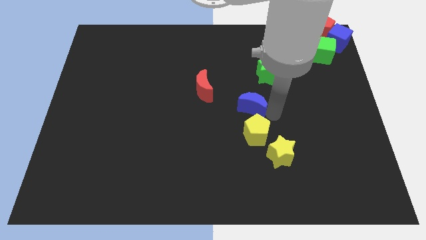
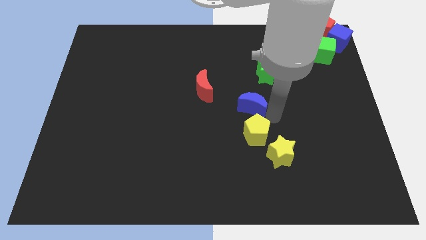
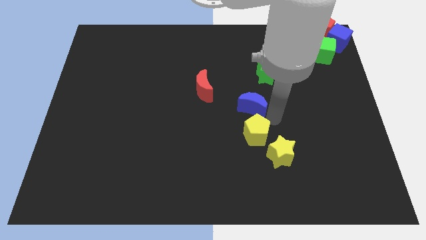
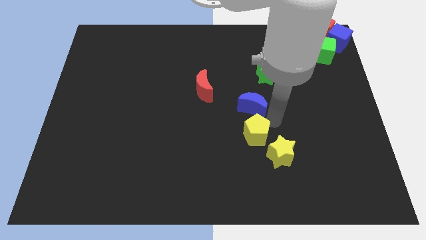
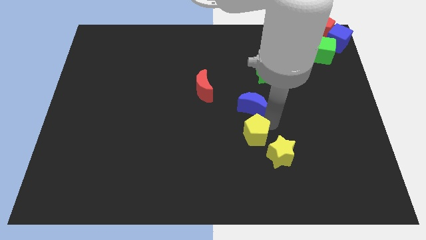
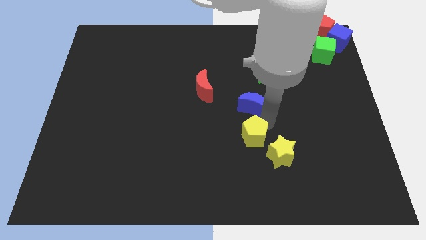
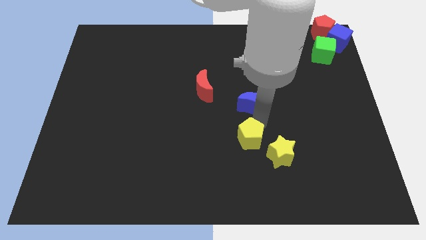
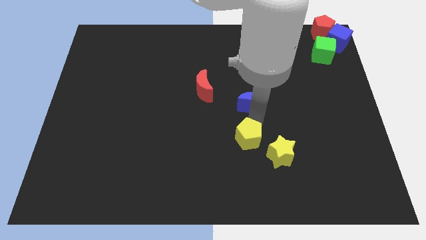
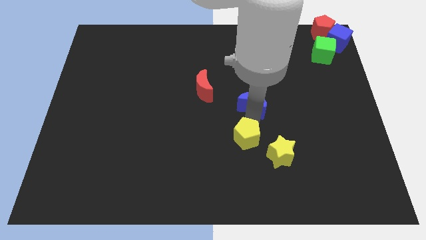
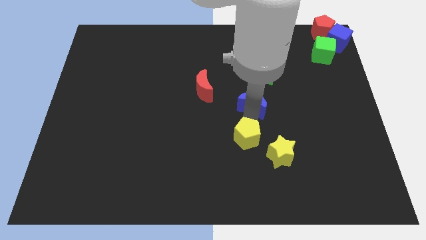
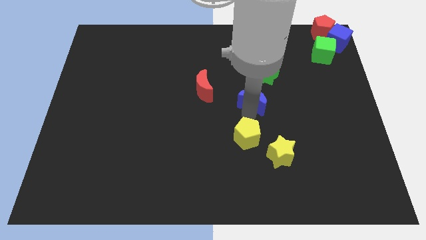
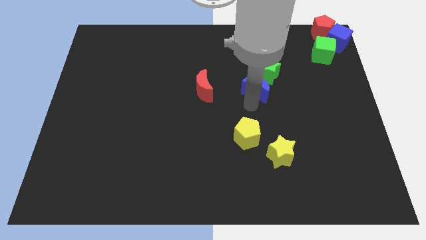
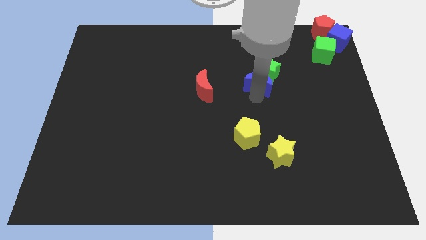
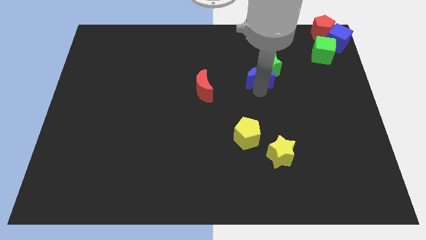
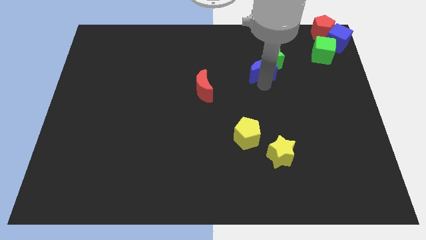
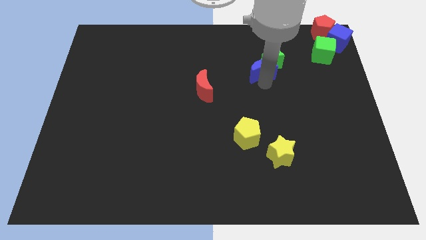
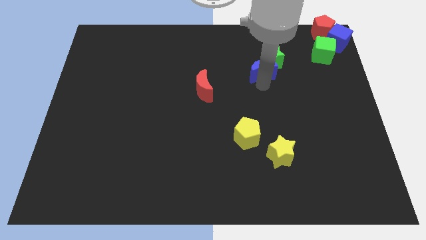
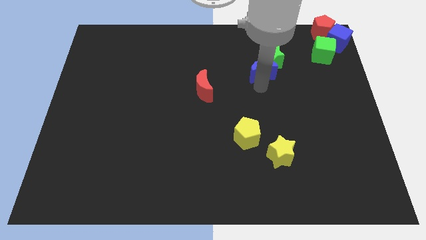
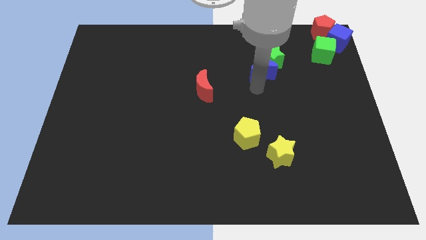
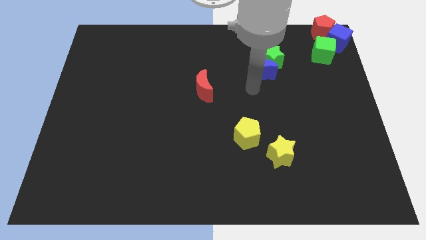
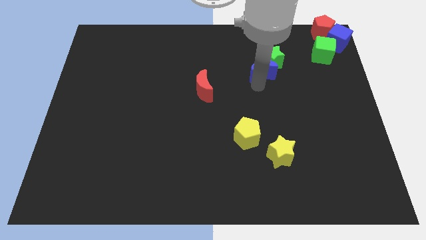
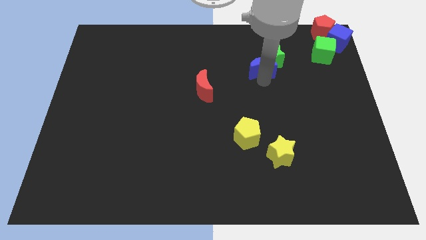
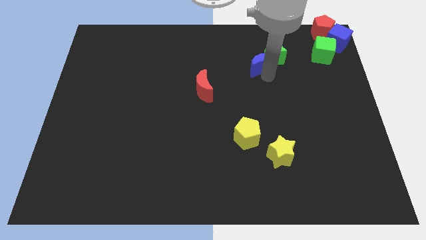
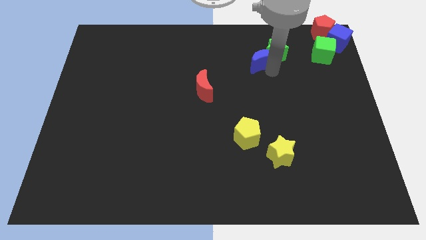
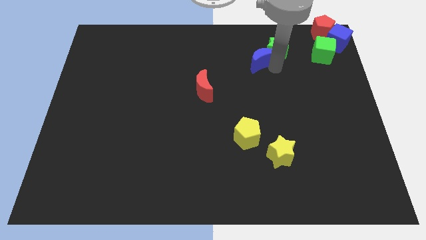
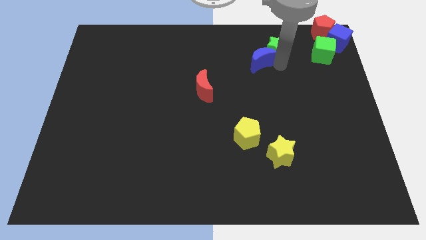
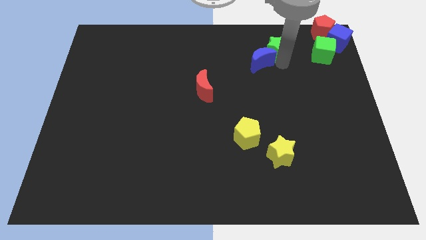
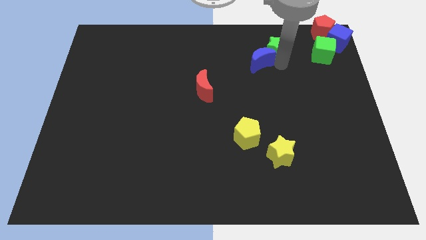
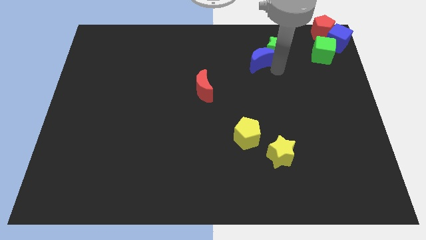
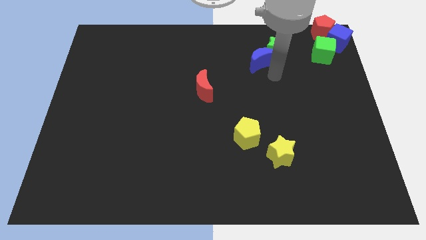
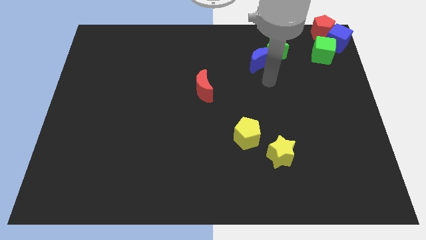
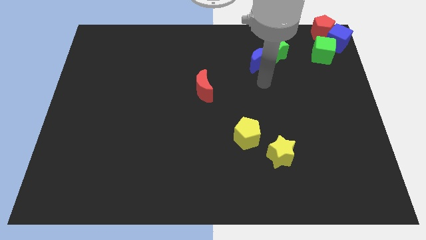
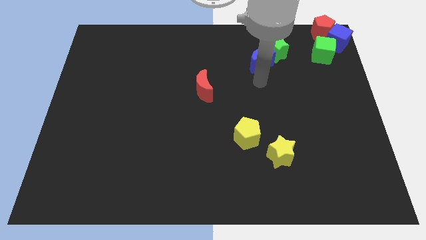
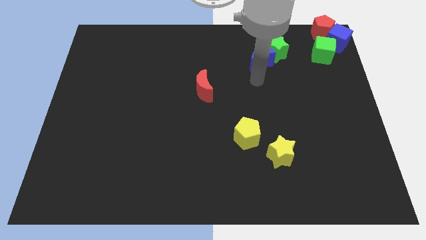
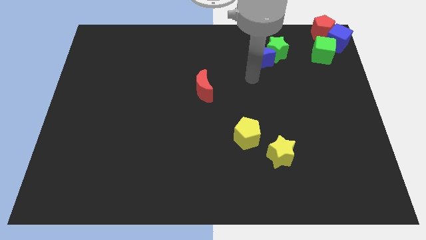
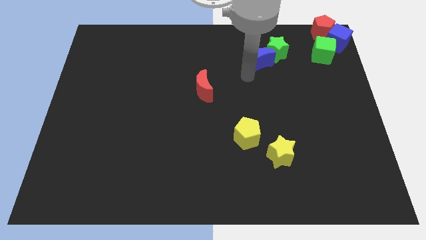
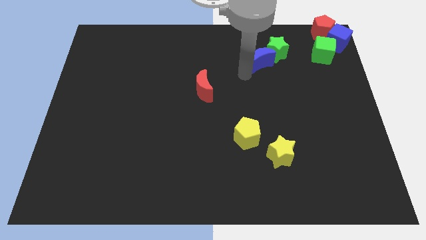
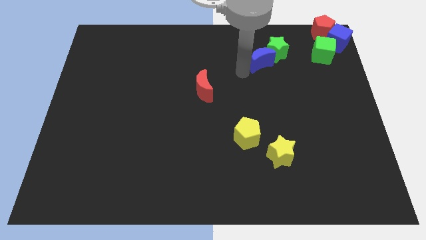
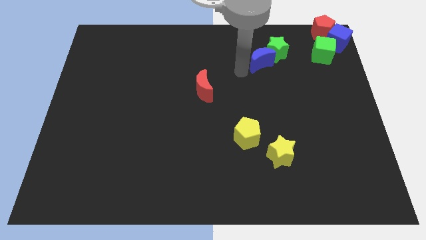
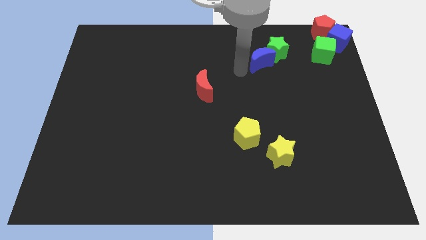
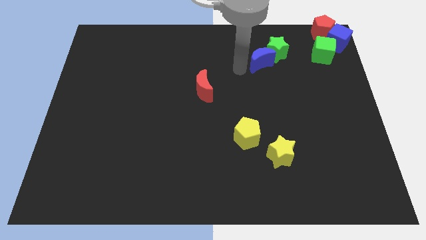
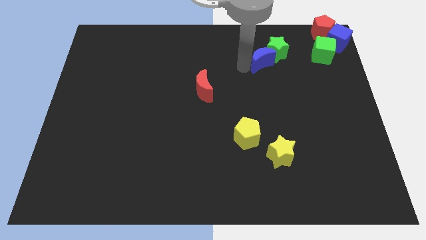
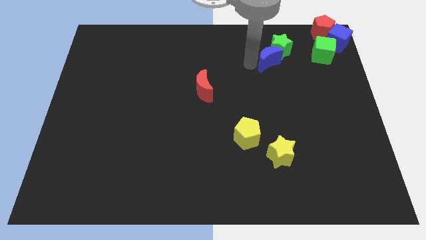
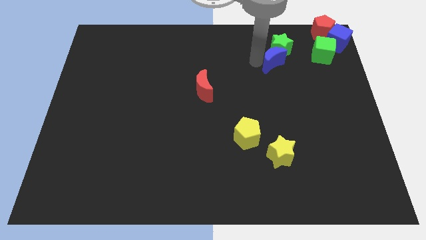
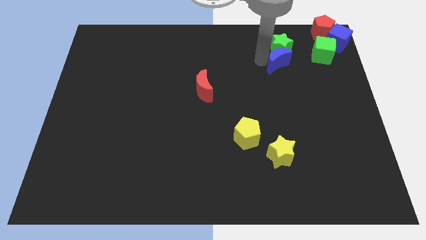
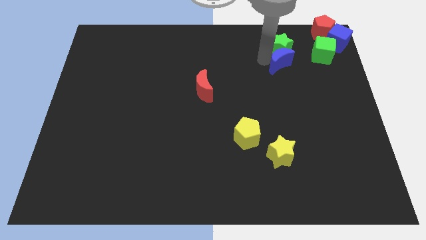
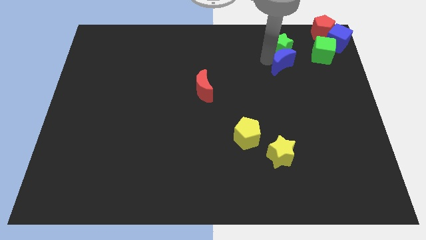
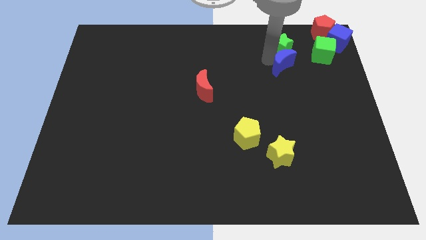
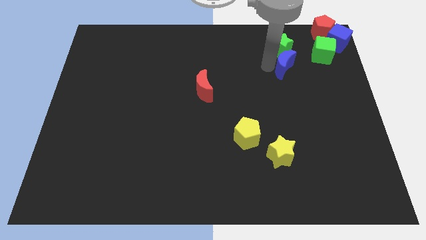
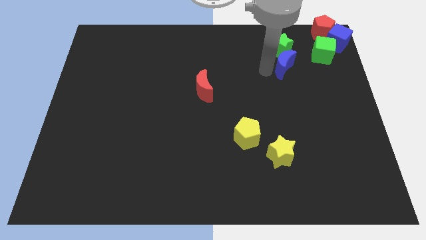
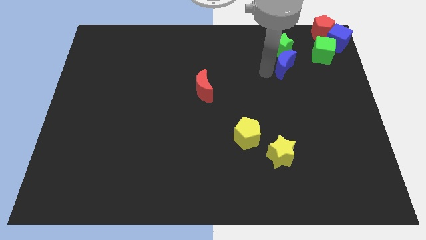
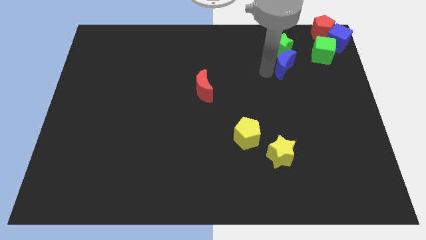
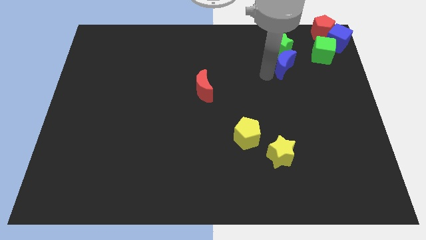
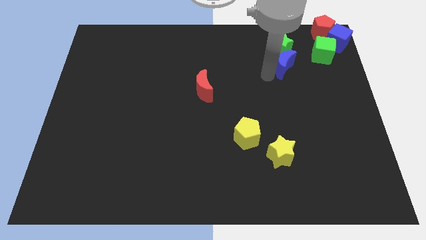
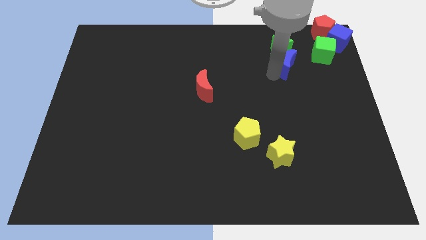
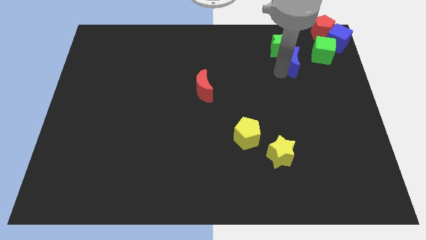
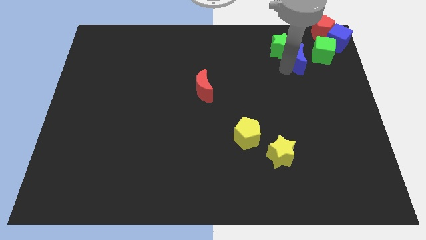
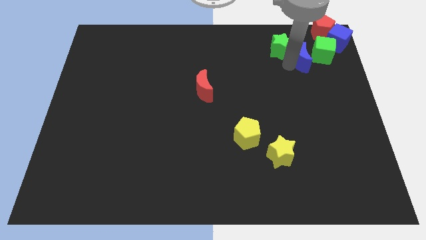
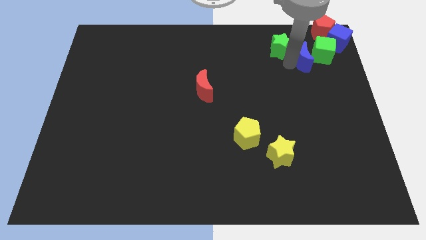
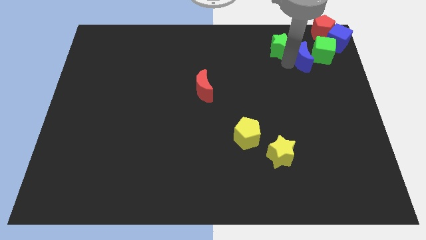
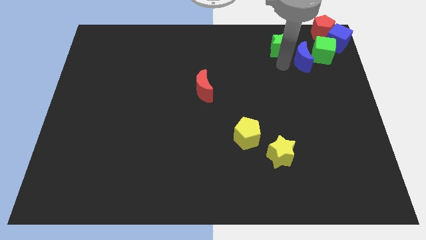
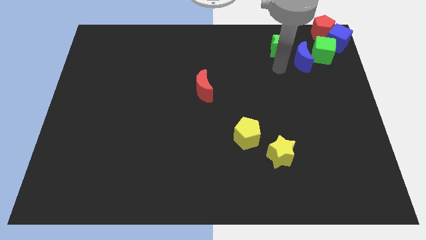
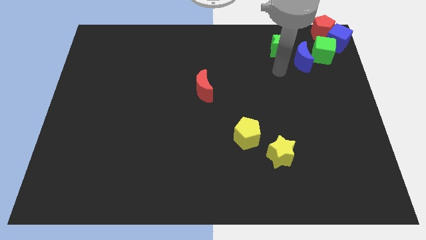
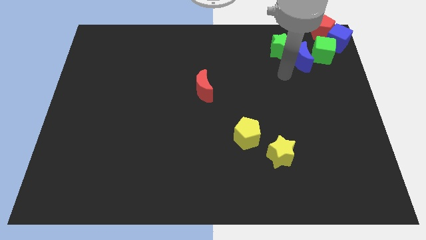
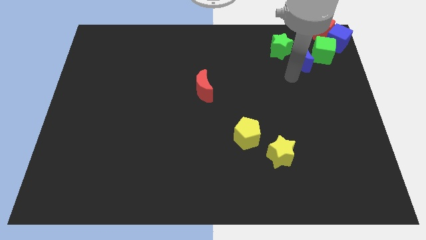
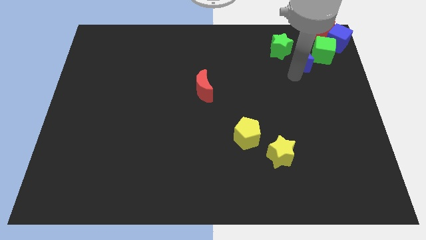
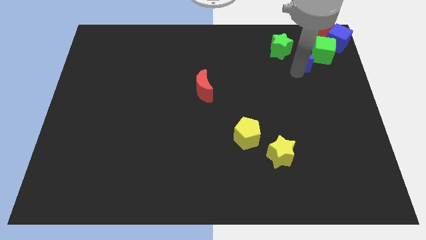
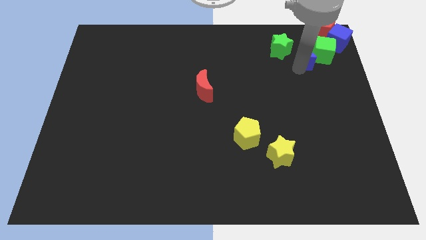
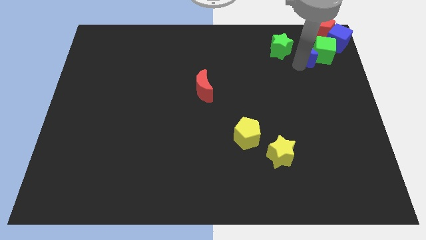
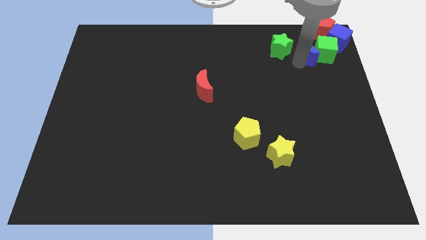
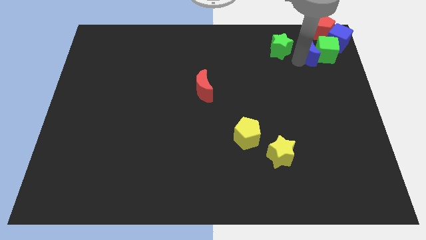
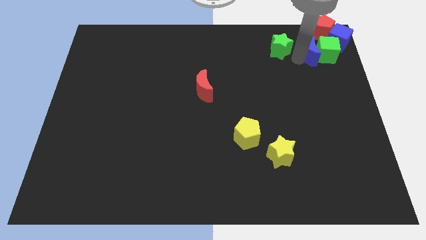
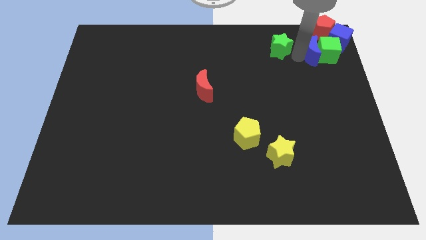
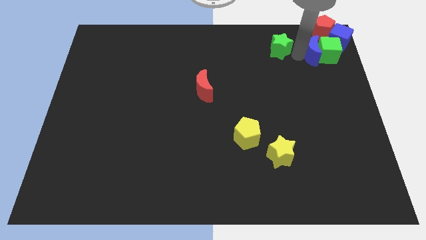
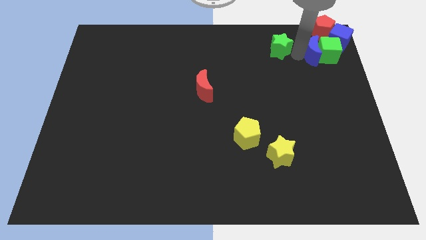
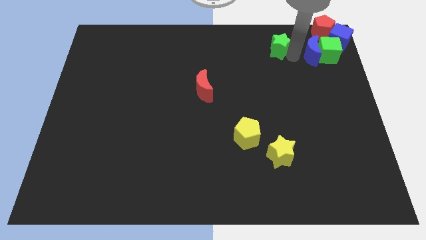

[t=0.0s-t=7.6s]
push the blue crescent into the green cube

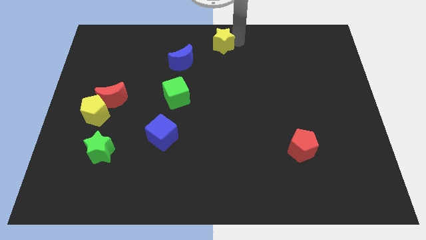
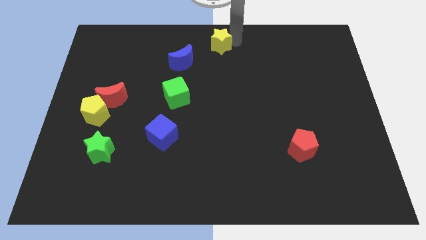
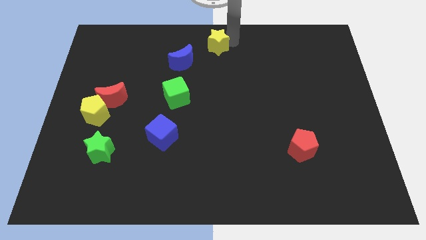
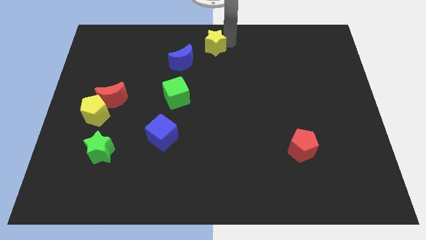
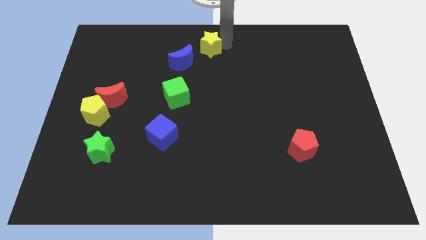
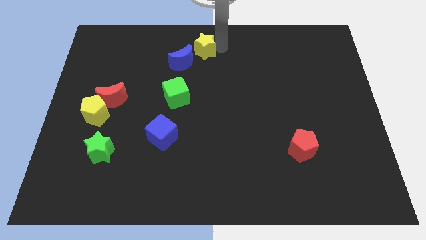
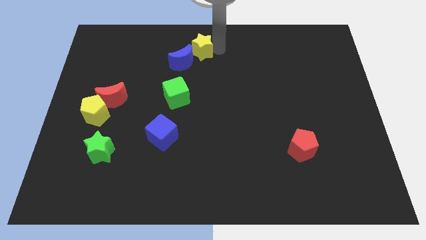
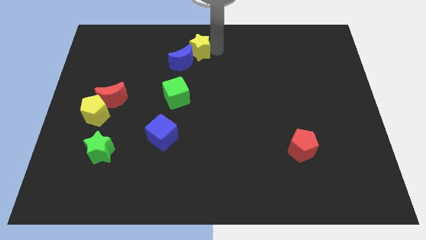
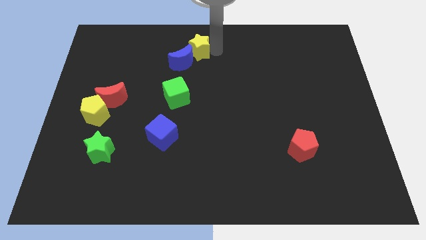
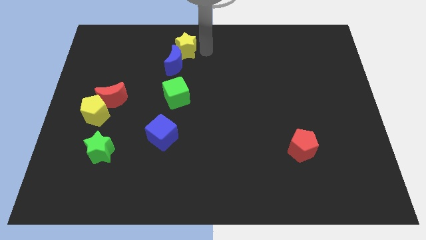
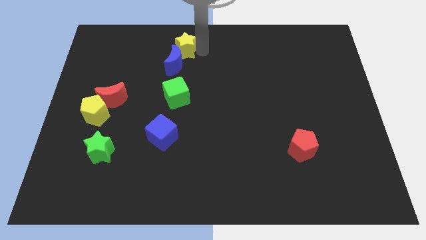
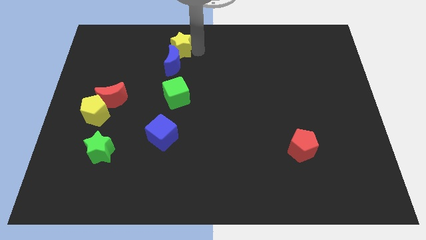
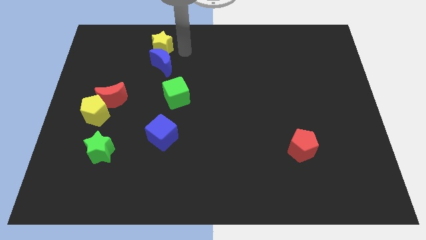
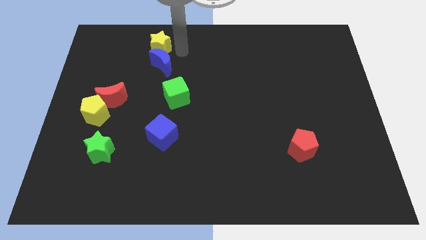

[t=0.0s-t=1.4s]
push the yellow star into the blue moon
